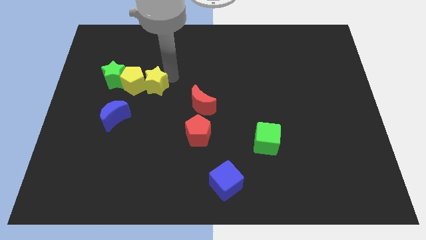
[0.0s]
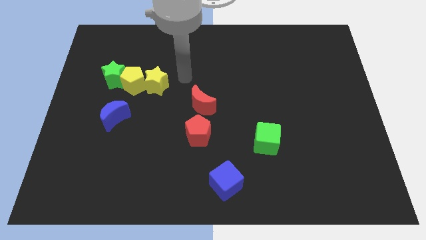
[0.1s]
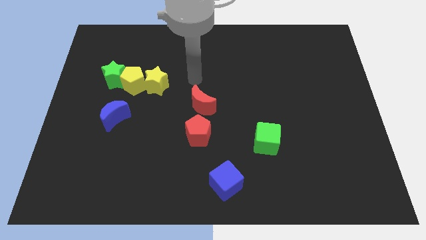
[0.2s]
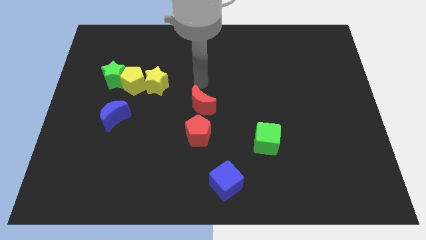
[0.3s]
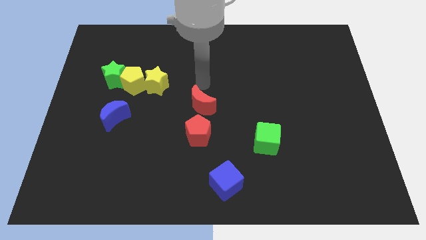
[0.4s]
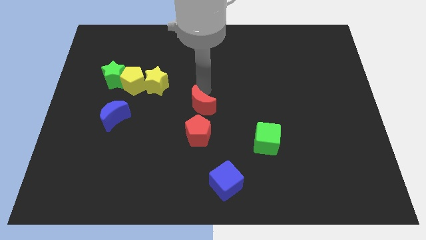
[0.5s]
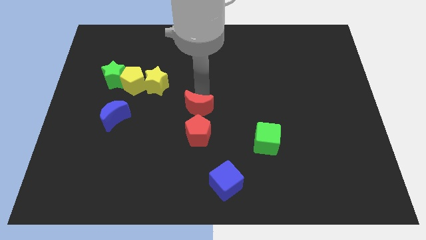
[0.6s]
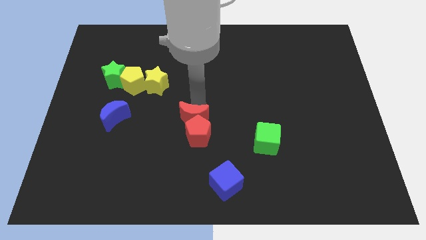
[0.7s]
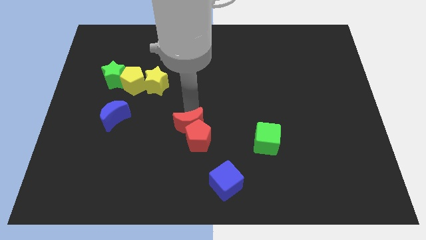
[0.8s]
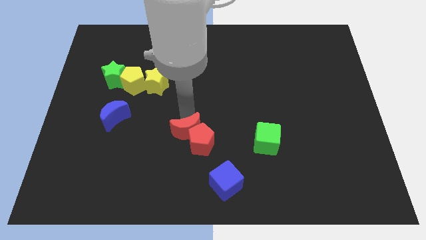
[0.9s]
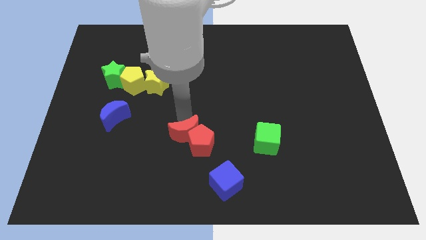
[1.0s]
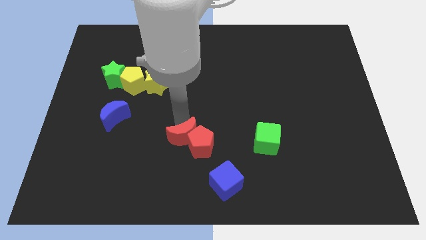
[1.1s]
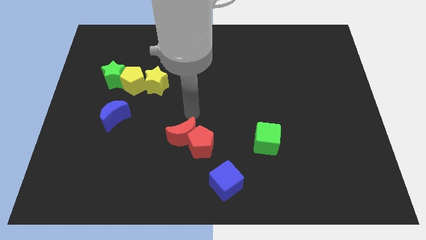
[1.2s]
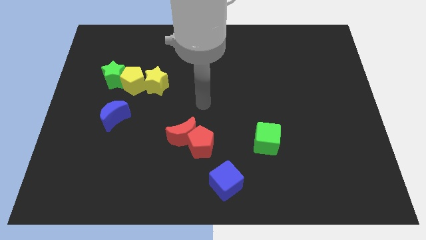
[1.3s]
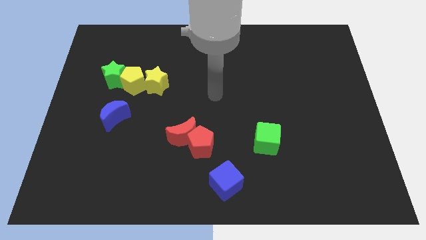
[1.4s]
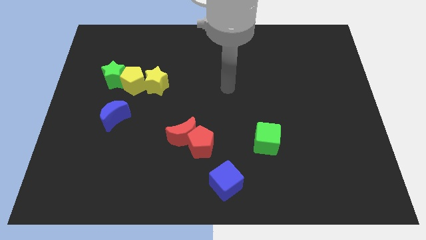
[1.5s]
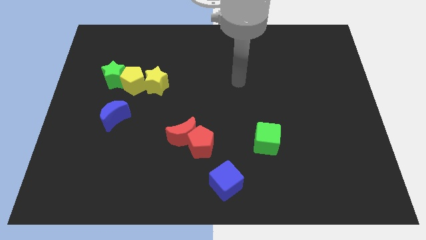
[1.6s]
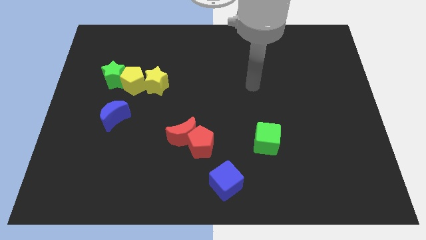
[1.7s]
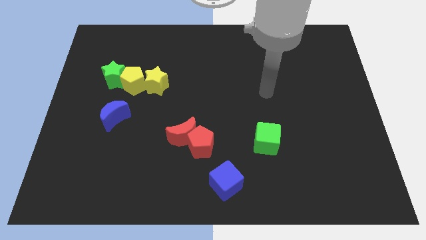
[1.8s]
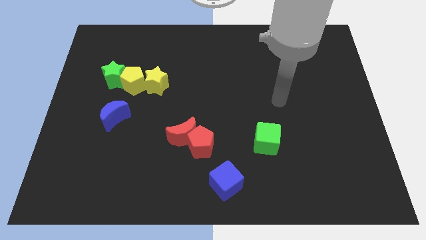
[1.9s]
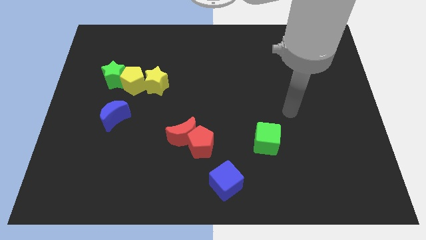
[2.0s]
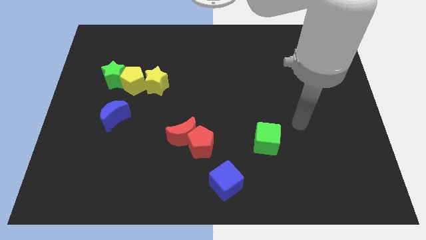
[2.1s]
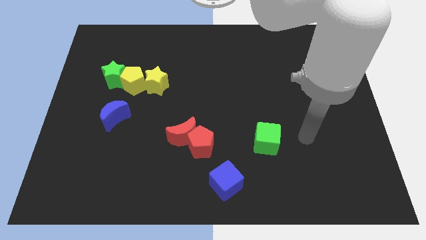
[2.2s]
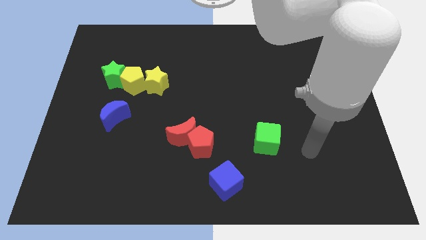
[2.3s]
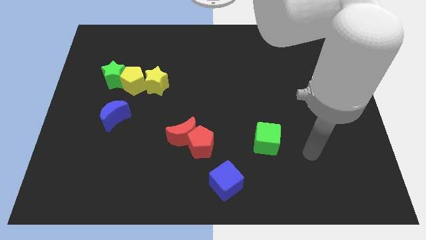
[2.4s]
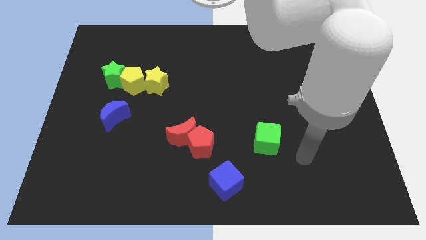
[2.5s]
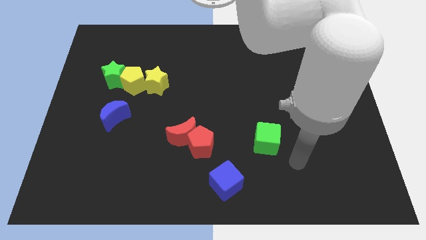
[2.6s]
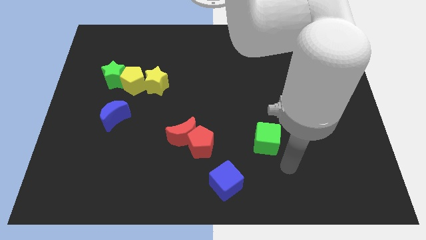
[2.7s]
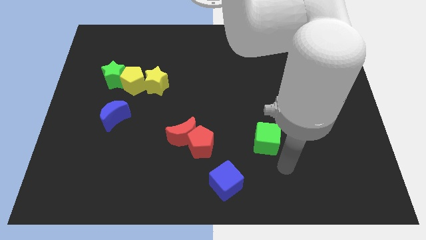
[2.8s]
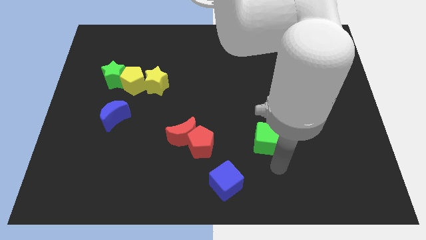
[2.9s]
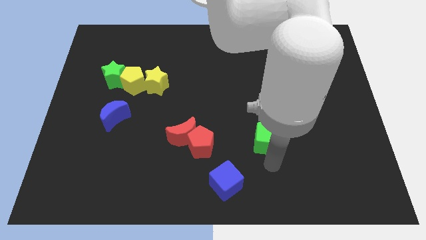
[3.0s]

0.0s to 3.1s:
move the red blocks horizontally to the left side of the green cube

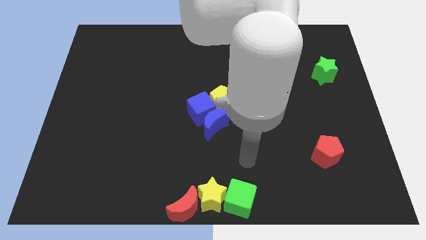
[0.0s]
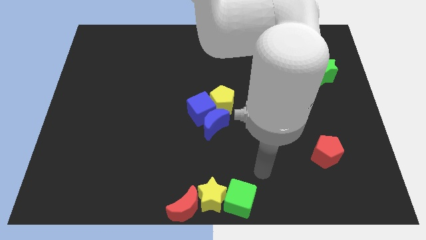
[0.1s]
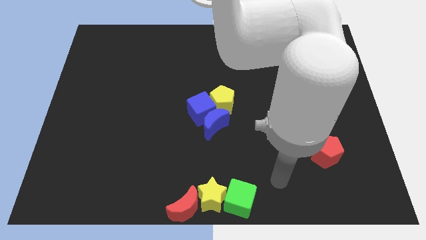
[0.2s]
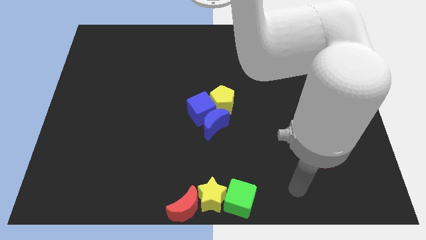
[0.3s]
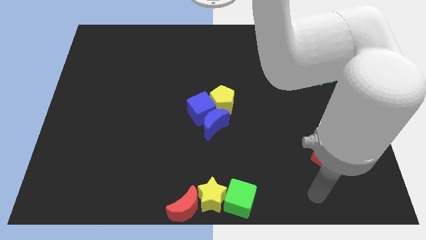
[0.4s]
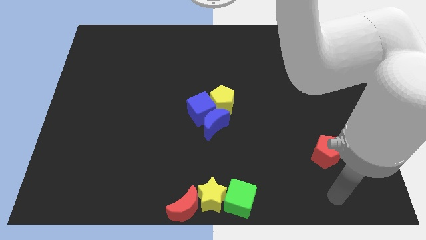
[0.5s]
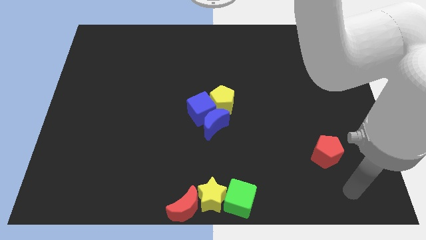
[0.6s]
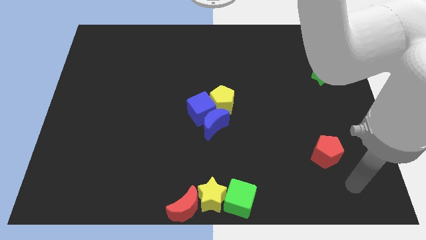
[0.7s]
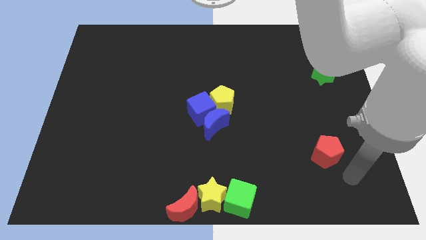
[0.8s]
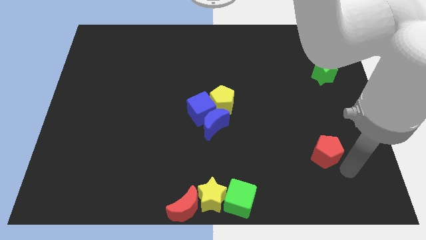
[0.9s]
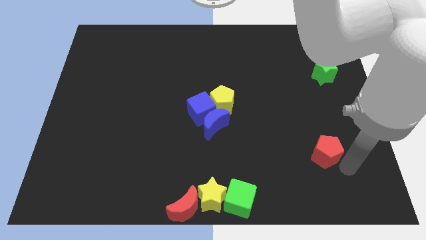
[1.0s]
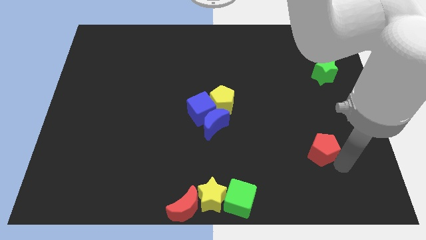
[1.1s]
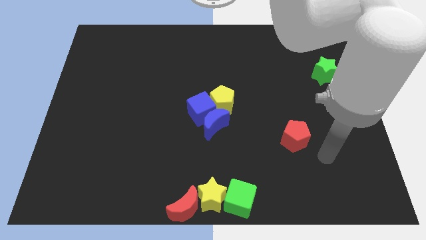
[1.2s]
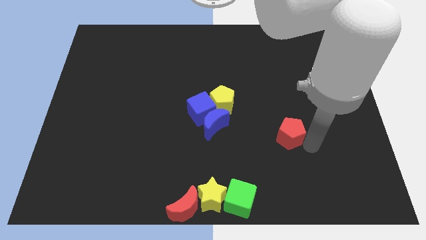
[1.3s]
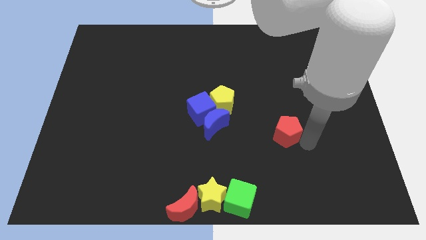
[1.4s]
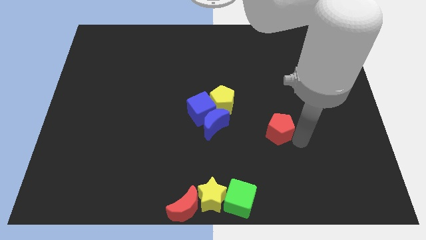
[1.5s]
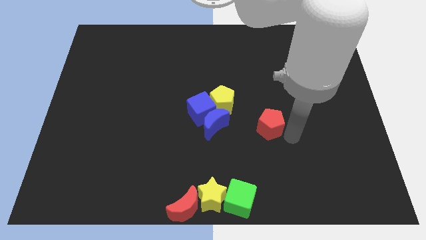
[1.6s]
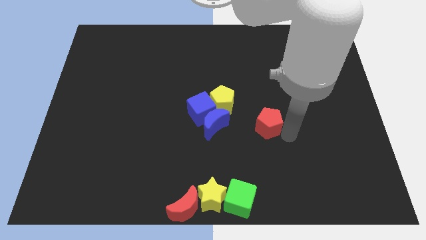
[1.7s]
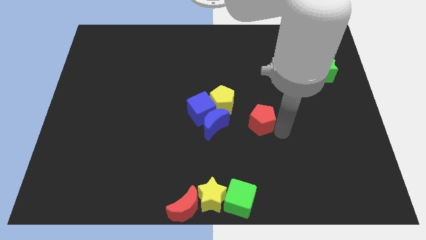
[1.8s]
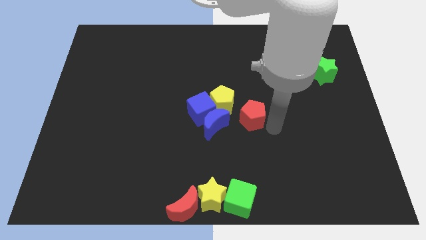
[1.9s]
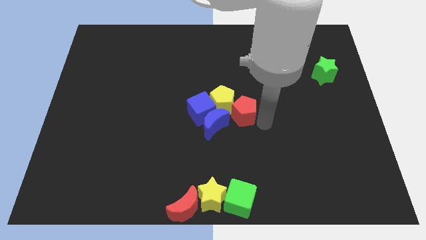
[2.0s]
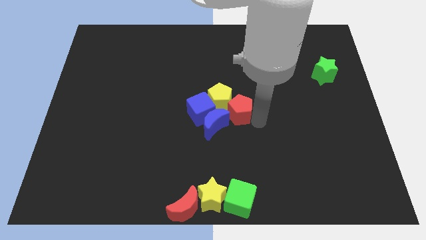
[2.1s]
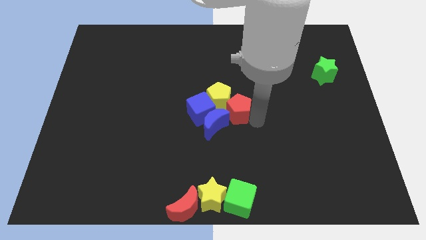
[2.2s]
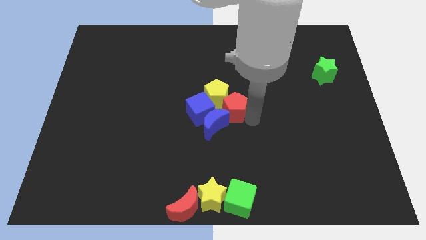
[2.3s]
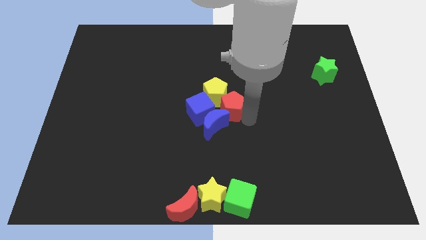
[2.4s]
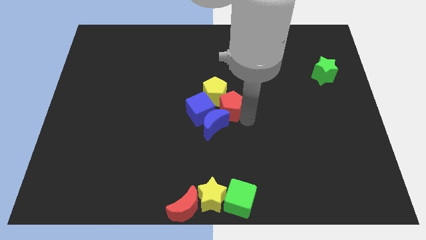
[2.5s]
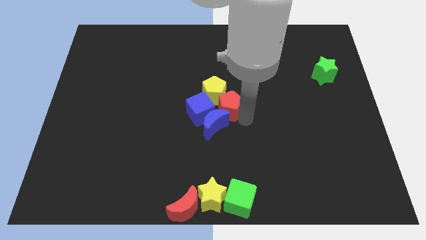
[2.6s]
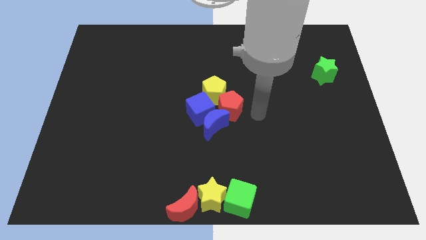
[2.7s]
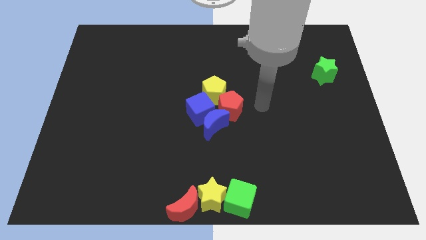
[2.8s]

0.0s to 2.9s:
push the red pentagon to the bottom right side of the yellow pentagon

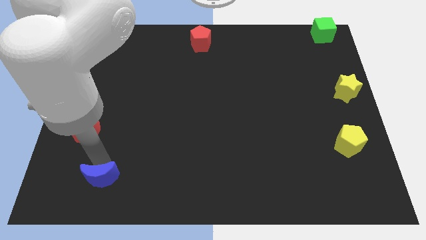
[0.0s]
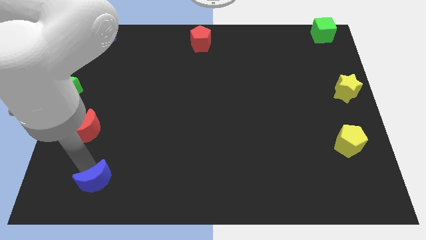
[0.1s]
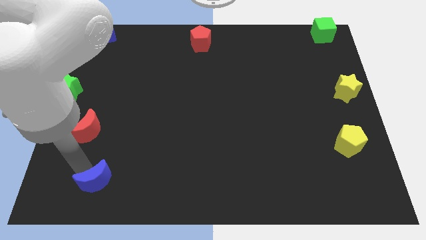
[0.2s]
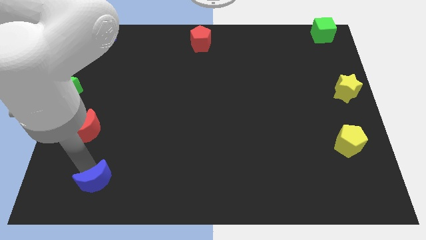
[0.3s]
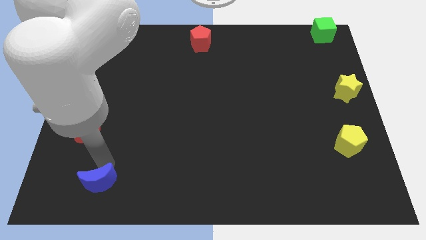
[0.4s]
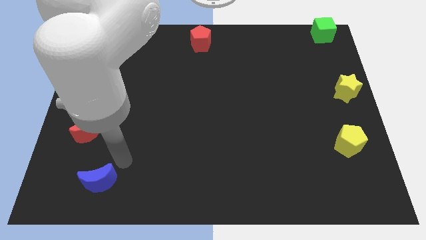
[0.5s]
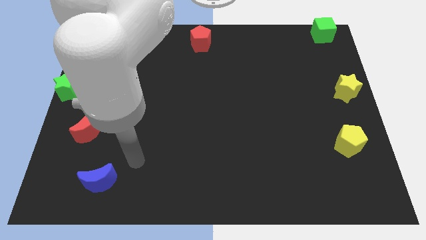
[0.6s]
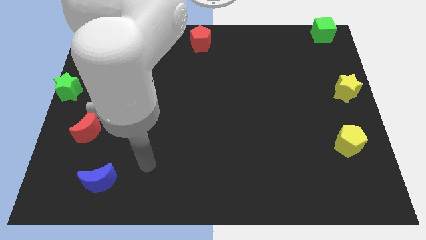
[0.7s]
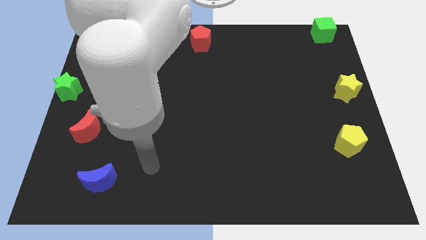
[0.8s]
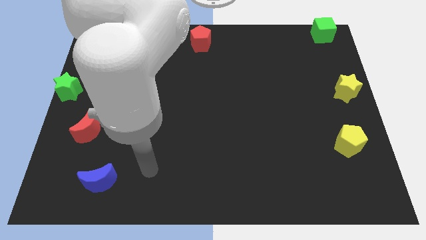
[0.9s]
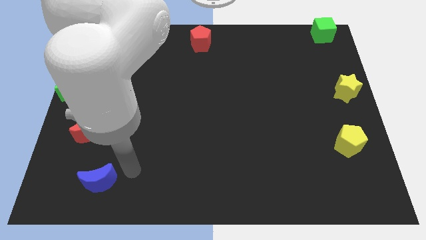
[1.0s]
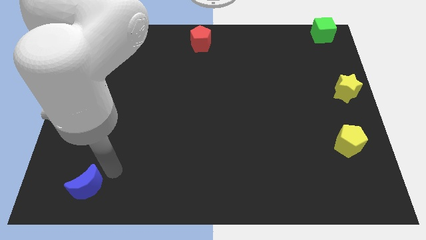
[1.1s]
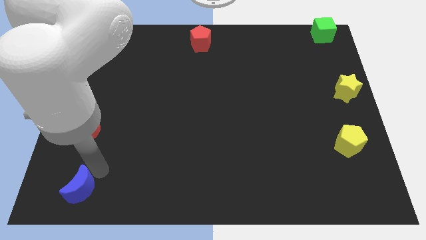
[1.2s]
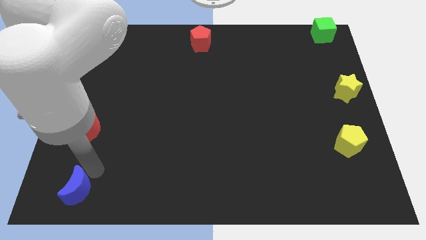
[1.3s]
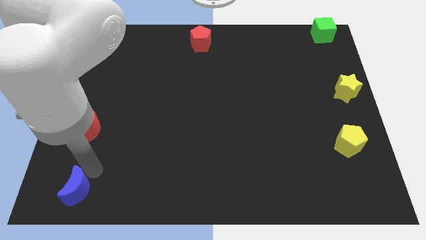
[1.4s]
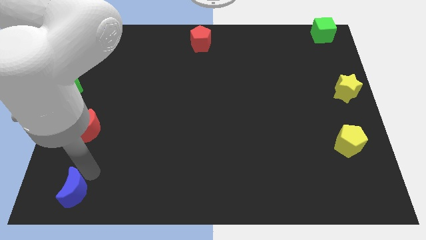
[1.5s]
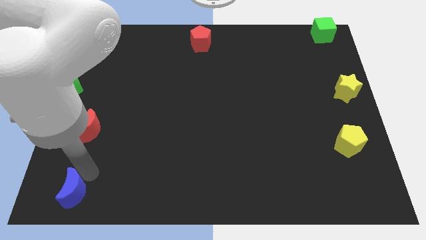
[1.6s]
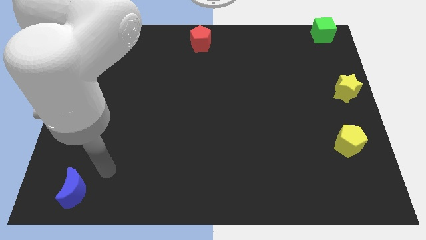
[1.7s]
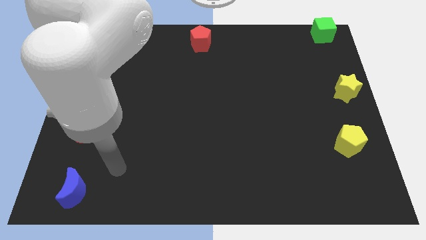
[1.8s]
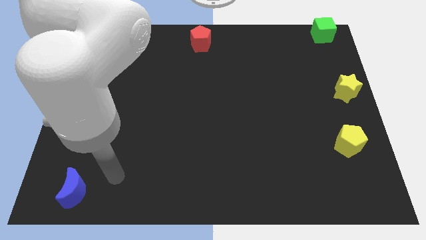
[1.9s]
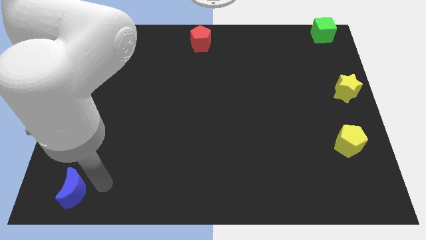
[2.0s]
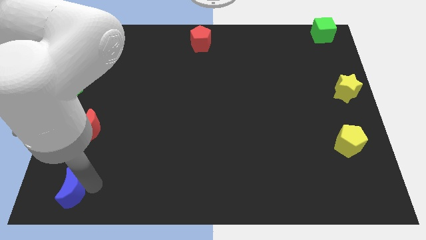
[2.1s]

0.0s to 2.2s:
slide the blue crescent below the red crescent

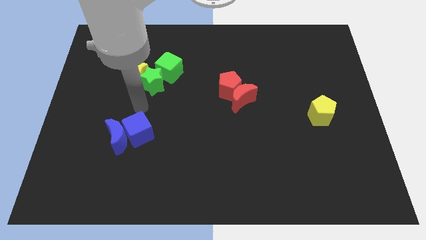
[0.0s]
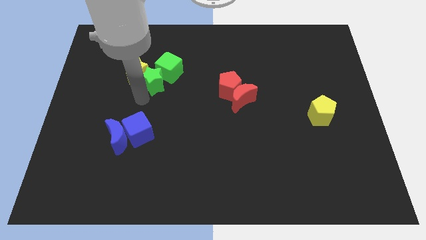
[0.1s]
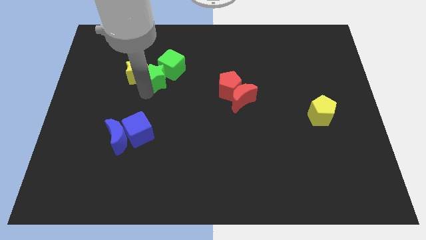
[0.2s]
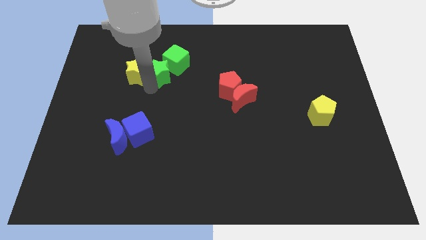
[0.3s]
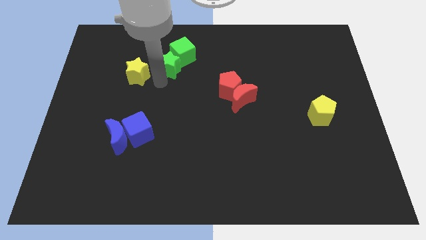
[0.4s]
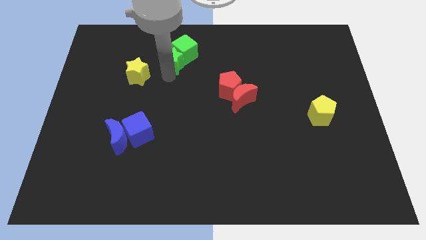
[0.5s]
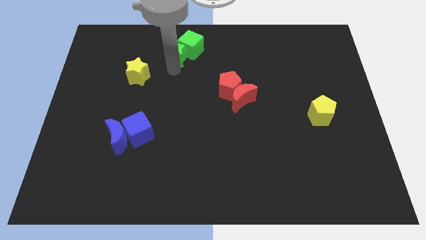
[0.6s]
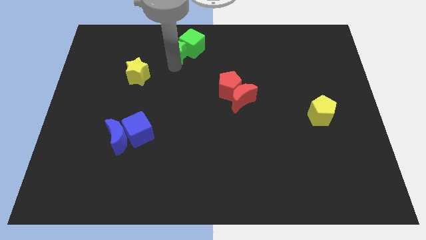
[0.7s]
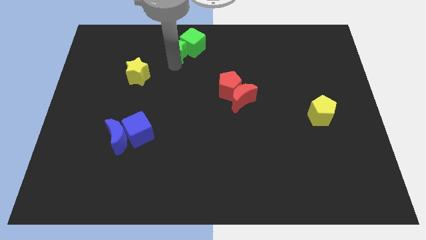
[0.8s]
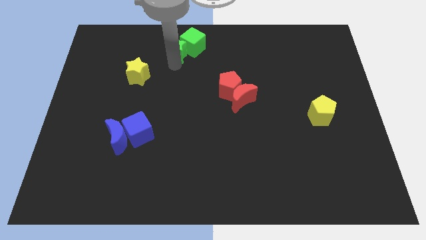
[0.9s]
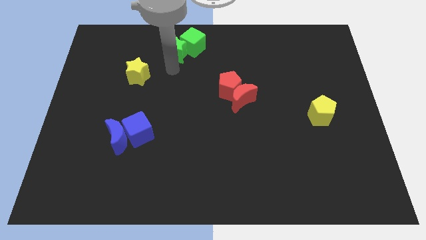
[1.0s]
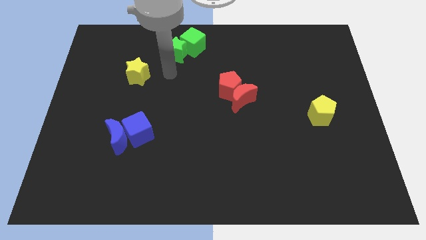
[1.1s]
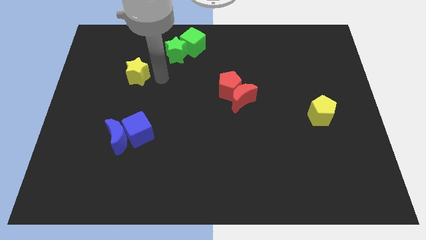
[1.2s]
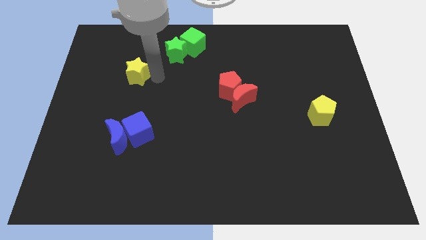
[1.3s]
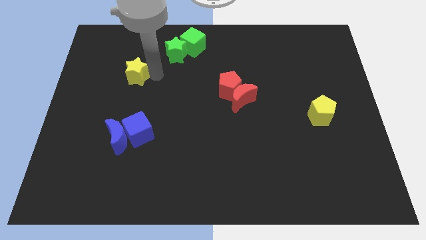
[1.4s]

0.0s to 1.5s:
move the green blocks towards the top centre of the board
